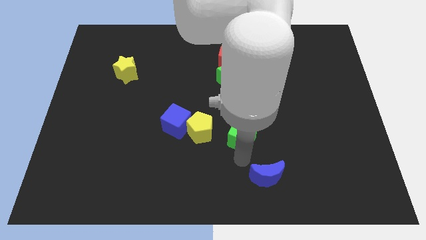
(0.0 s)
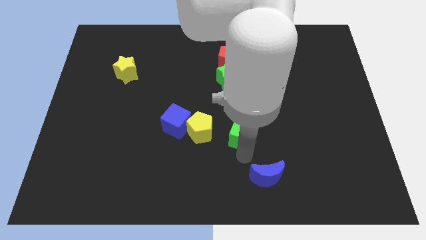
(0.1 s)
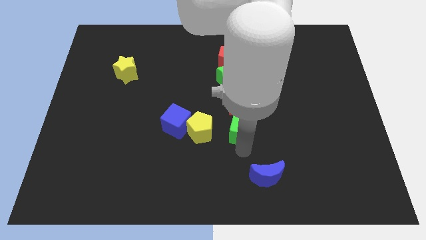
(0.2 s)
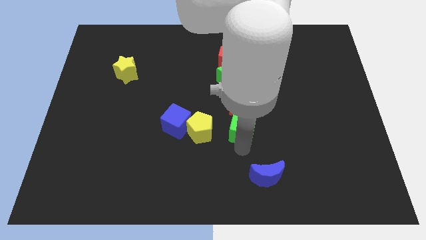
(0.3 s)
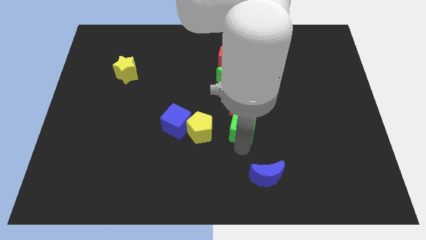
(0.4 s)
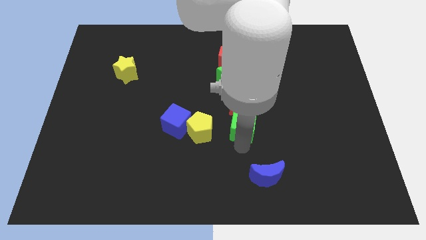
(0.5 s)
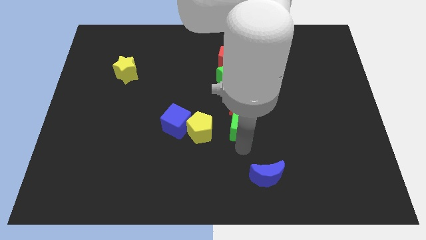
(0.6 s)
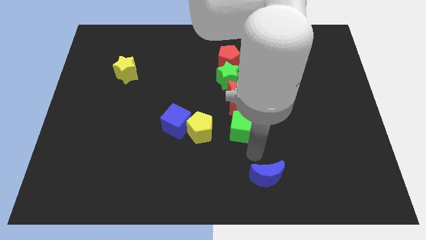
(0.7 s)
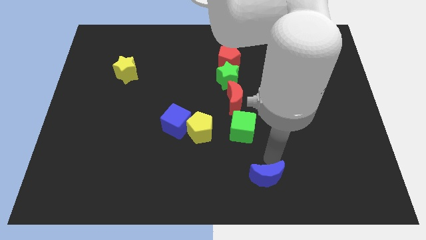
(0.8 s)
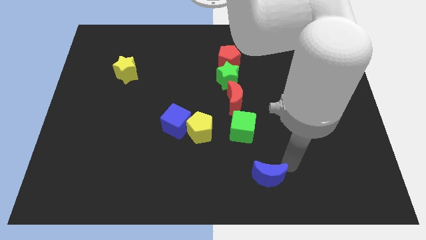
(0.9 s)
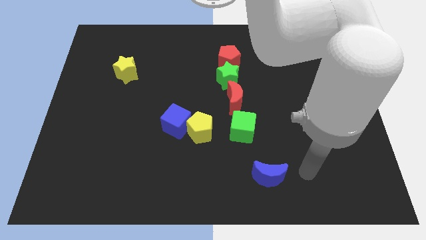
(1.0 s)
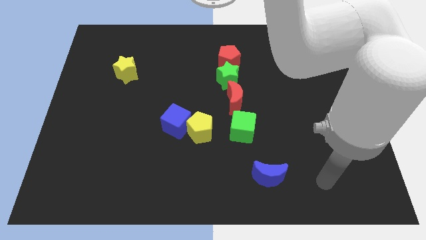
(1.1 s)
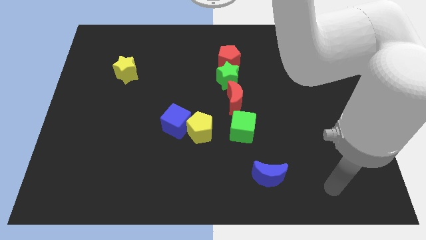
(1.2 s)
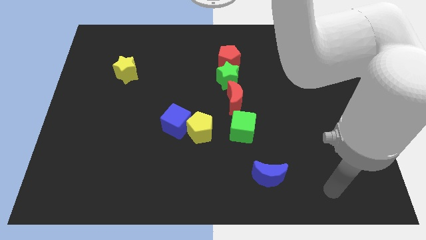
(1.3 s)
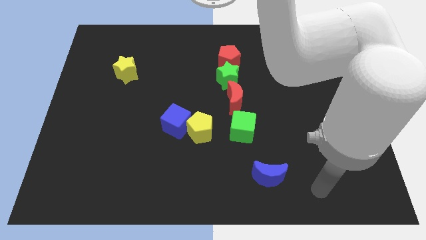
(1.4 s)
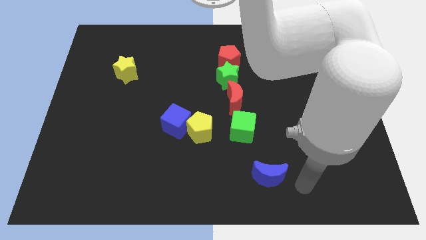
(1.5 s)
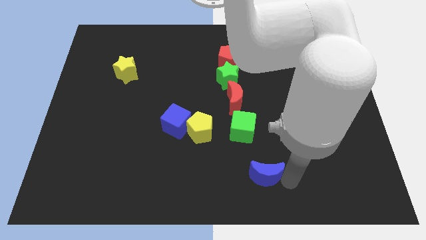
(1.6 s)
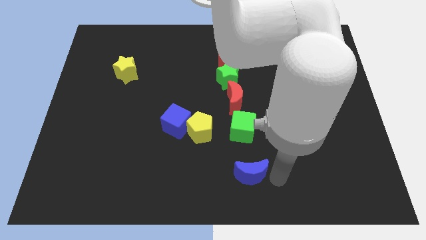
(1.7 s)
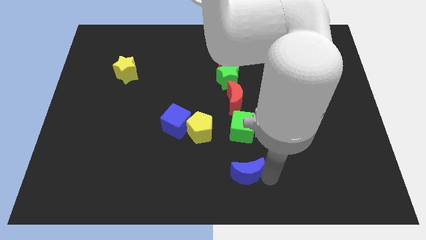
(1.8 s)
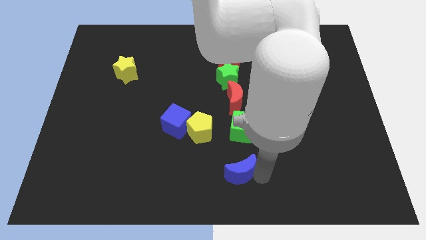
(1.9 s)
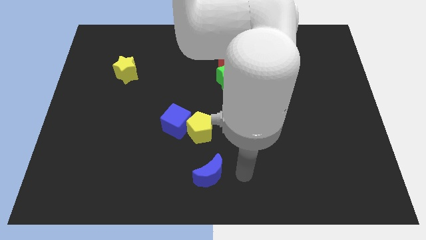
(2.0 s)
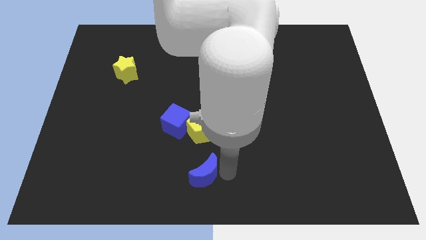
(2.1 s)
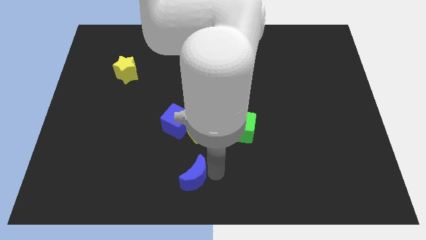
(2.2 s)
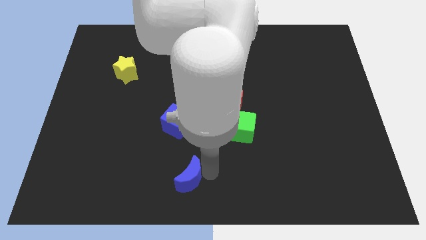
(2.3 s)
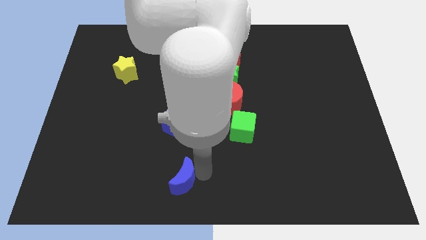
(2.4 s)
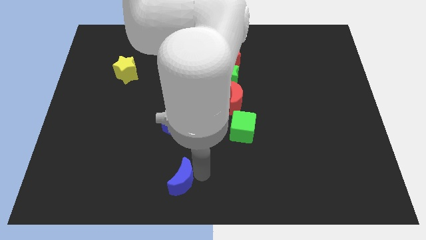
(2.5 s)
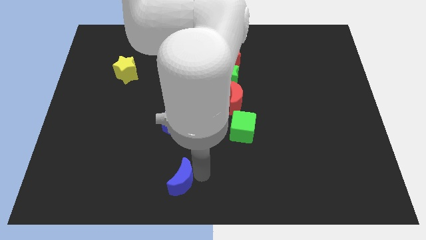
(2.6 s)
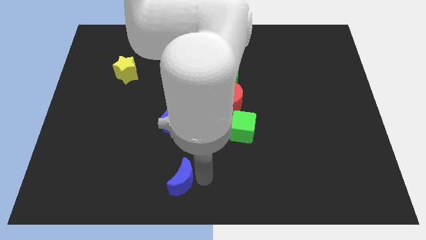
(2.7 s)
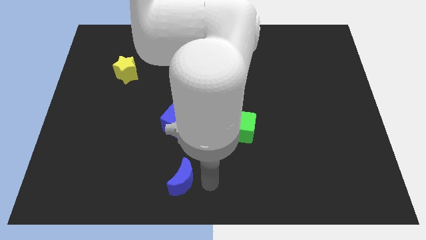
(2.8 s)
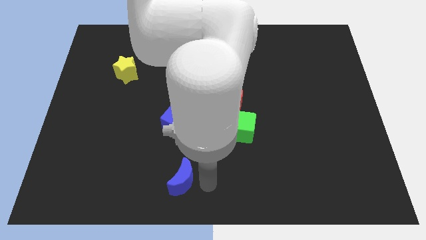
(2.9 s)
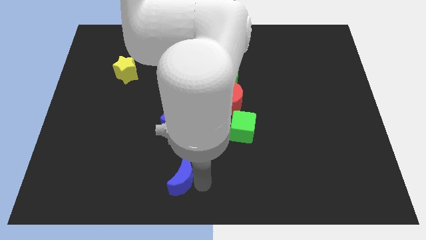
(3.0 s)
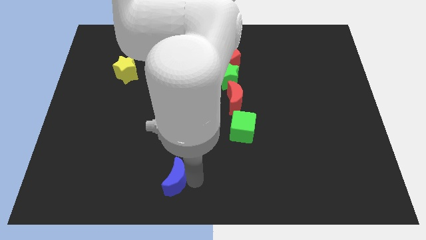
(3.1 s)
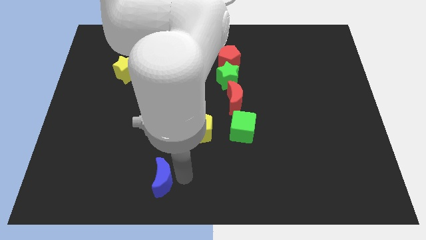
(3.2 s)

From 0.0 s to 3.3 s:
drag blue crescent below blue cube

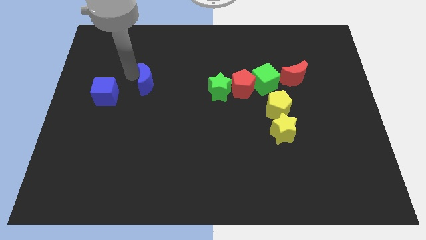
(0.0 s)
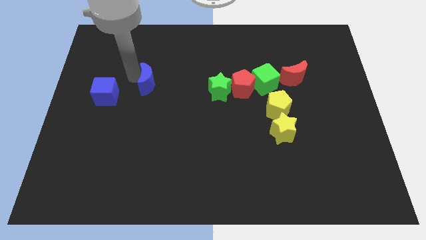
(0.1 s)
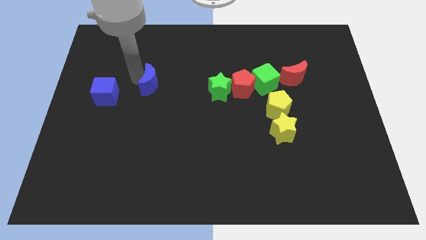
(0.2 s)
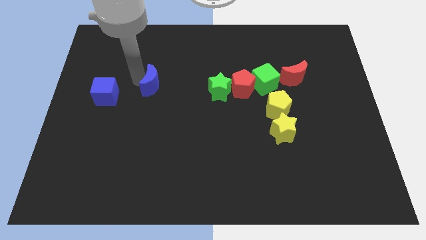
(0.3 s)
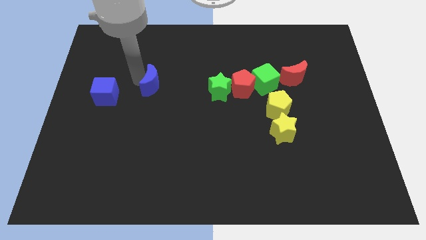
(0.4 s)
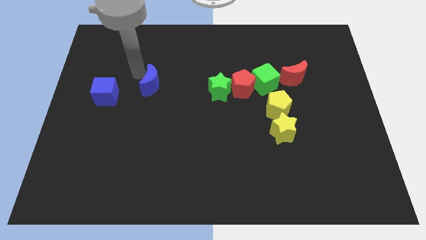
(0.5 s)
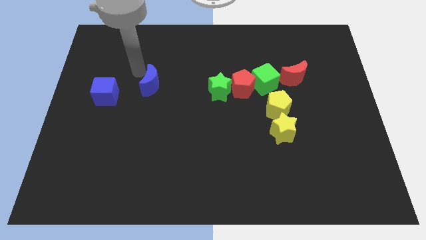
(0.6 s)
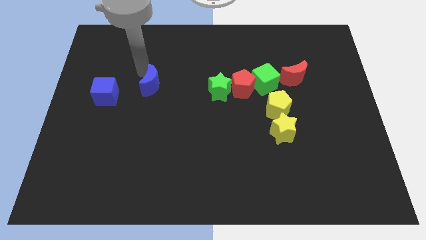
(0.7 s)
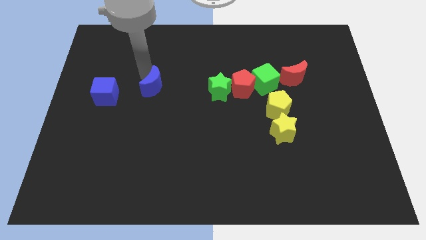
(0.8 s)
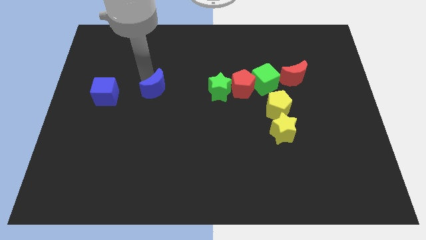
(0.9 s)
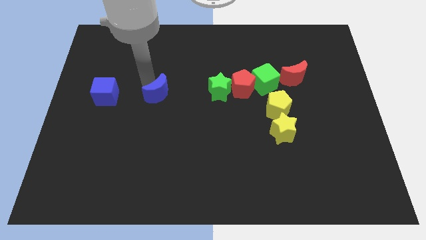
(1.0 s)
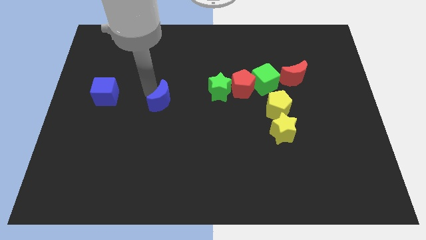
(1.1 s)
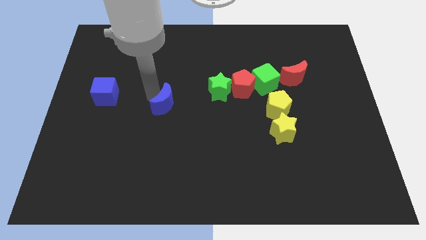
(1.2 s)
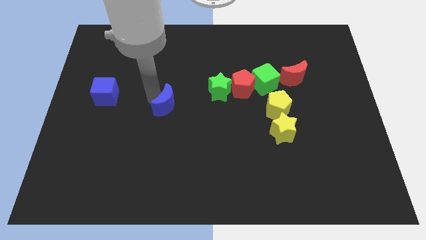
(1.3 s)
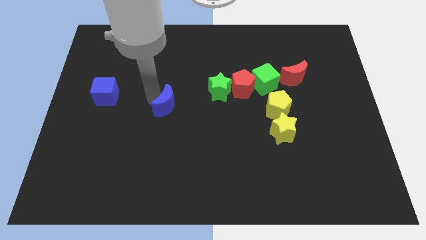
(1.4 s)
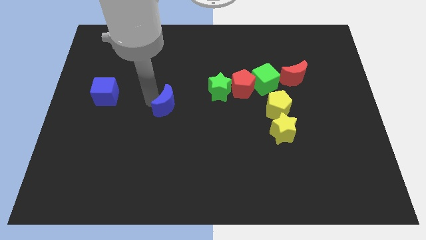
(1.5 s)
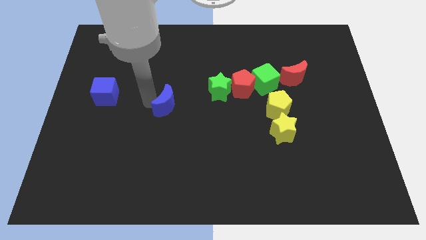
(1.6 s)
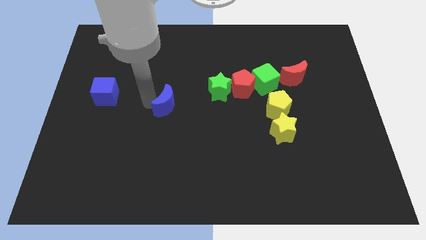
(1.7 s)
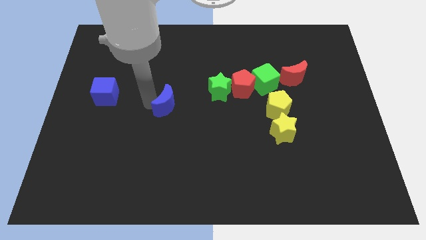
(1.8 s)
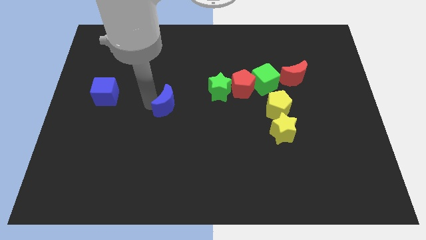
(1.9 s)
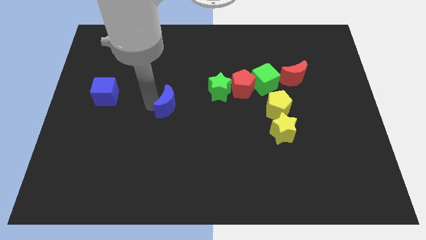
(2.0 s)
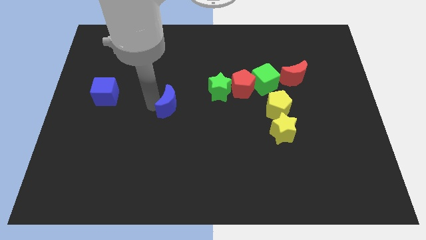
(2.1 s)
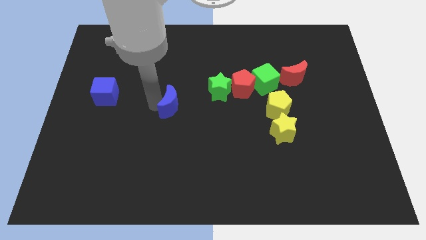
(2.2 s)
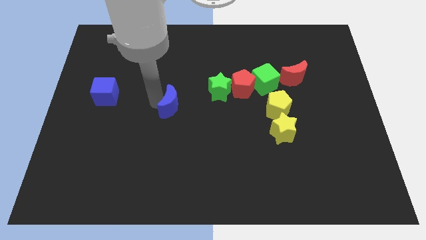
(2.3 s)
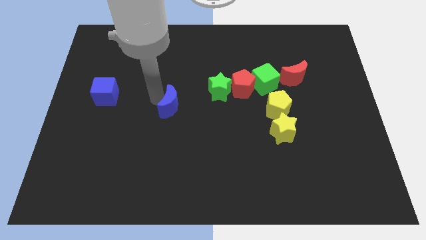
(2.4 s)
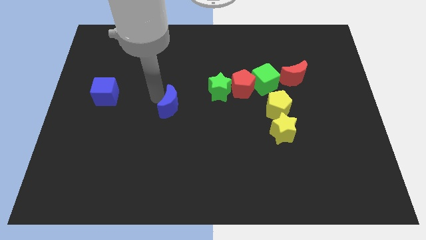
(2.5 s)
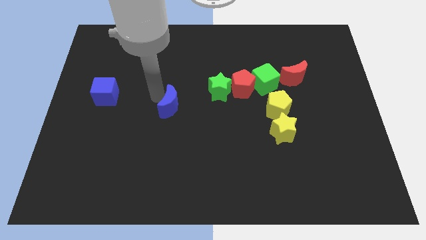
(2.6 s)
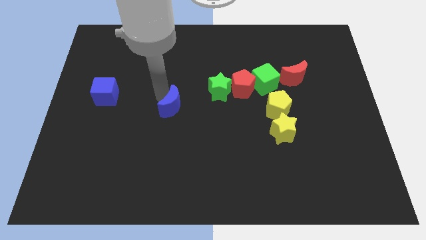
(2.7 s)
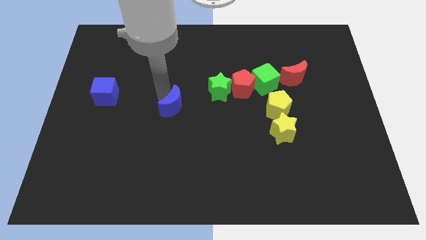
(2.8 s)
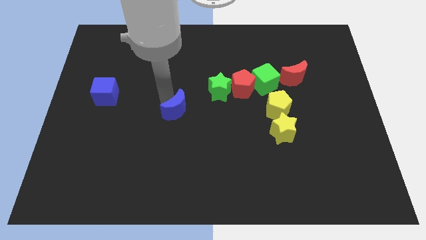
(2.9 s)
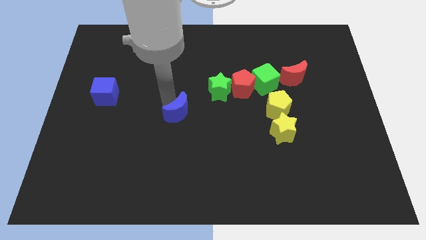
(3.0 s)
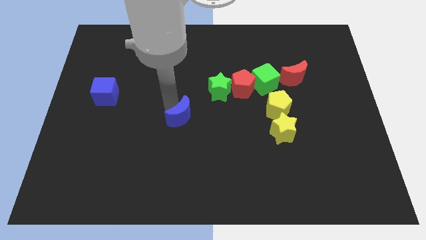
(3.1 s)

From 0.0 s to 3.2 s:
move blue crescent diagonally to the green star

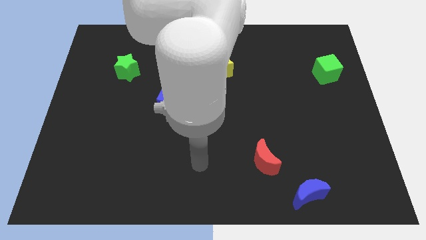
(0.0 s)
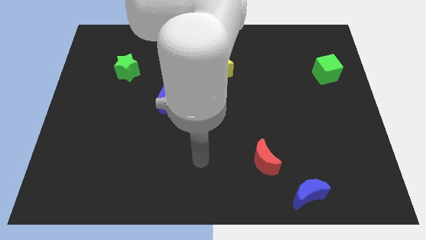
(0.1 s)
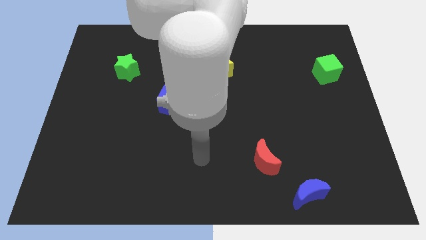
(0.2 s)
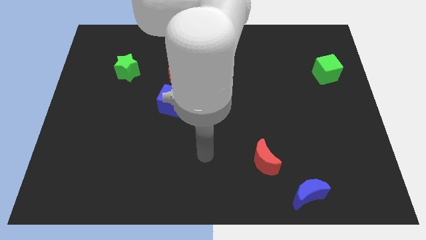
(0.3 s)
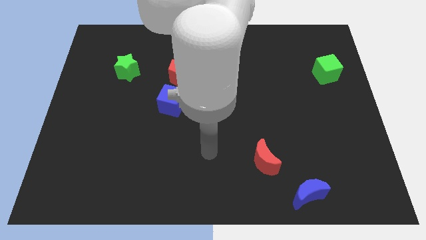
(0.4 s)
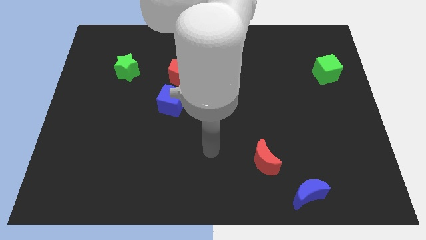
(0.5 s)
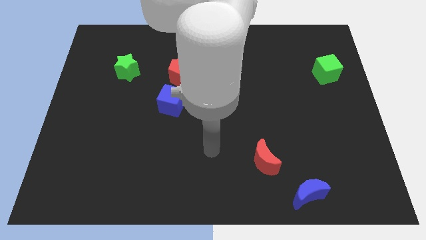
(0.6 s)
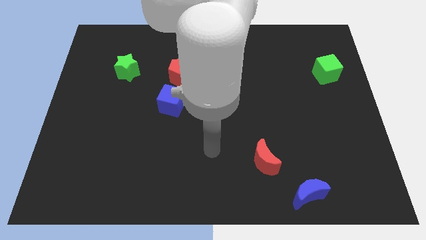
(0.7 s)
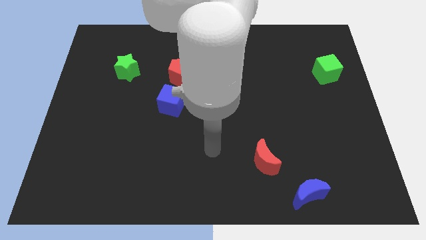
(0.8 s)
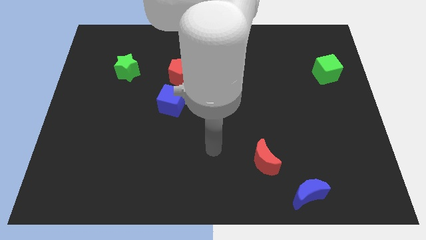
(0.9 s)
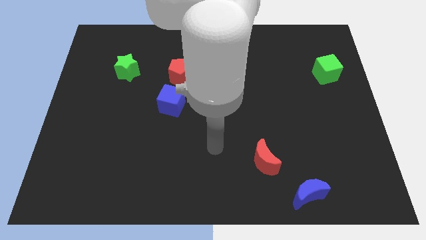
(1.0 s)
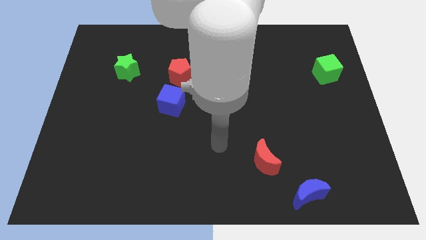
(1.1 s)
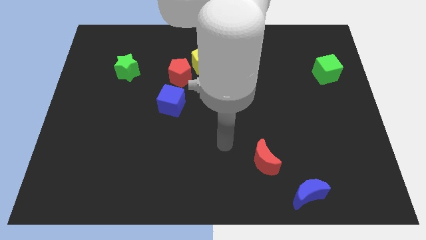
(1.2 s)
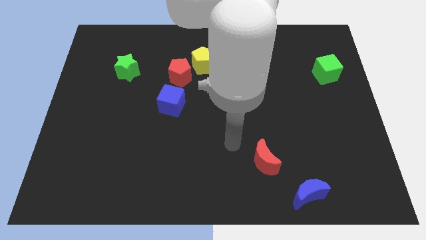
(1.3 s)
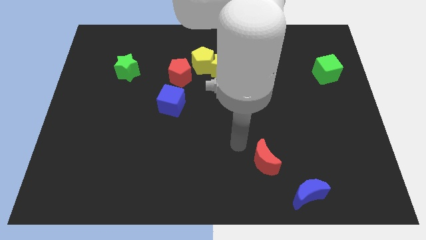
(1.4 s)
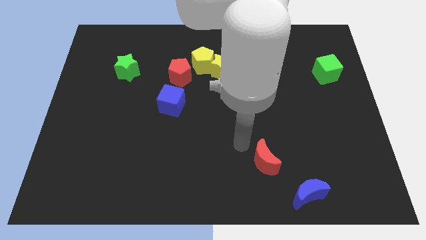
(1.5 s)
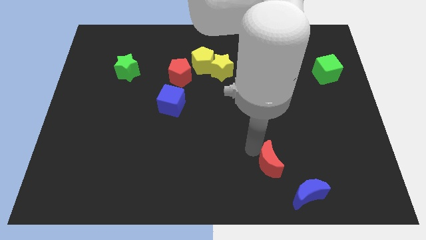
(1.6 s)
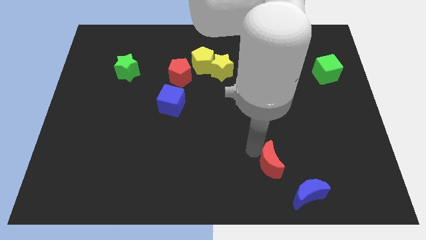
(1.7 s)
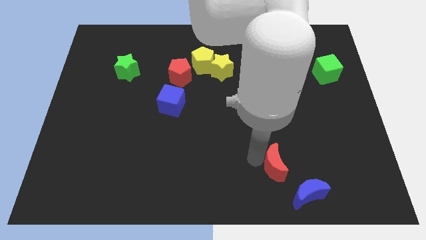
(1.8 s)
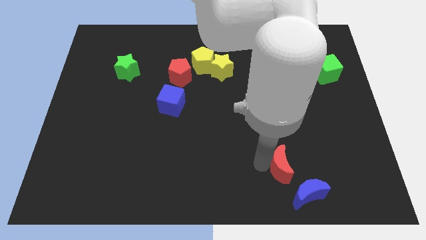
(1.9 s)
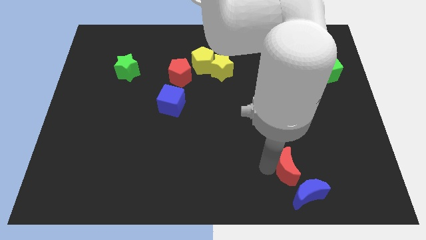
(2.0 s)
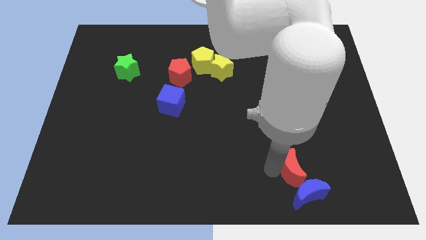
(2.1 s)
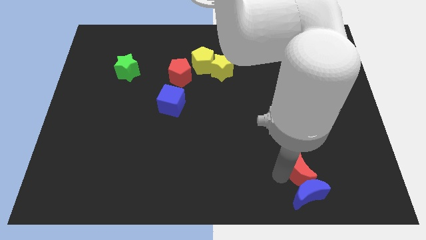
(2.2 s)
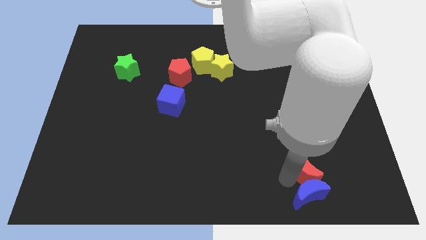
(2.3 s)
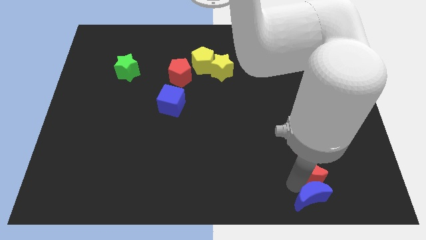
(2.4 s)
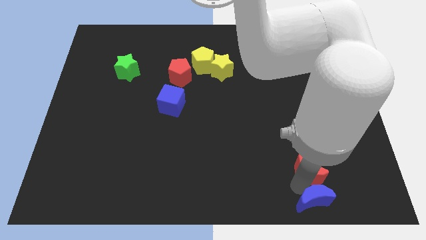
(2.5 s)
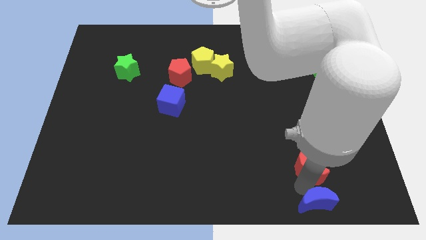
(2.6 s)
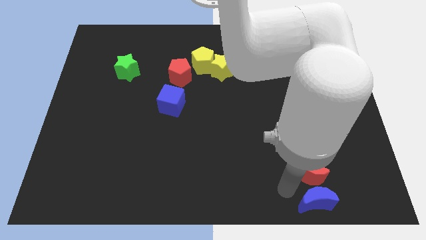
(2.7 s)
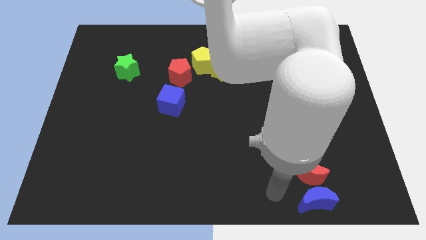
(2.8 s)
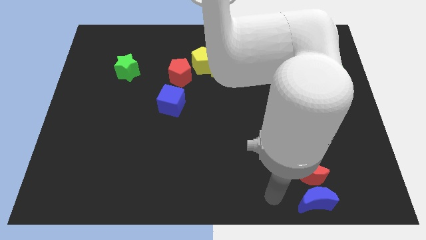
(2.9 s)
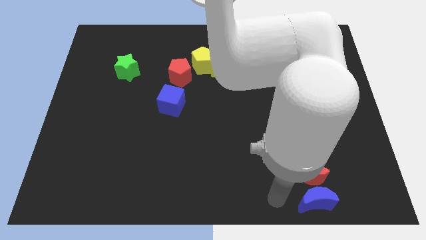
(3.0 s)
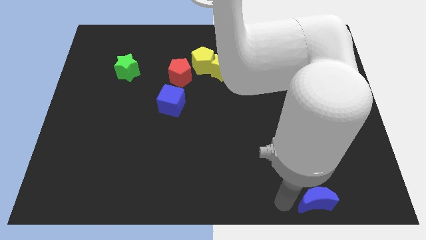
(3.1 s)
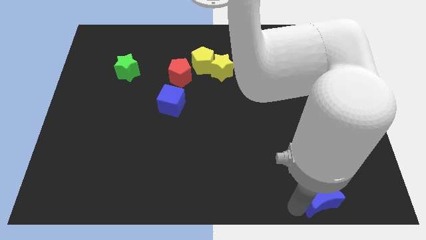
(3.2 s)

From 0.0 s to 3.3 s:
place the red crescent above the blue semicircle
